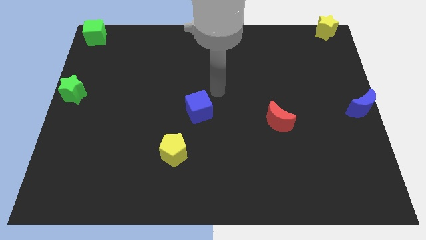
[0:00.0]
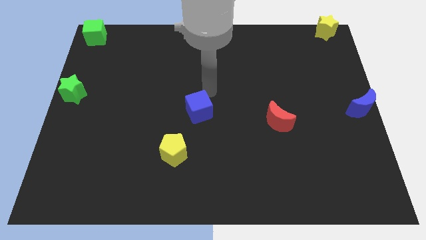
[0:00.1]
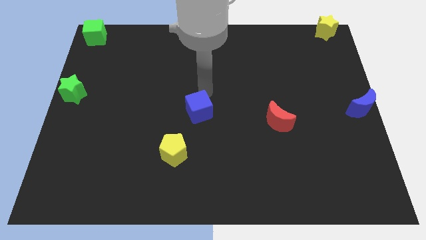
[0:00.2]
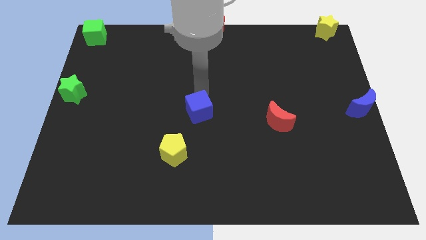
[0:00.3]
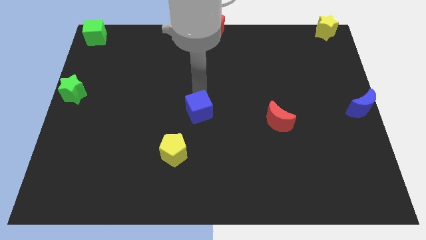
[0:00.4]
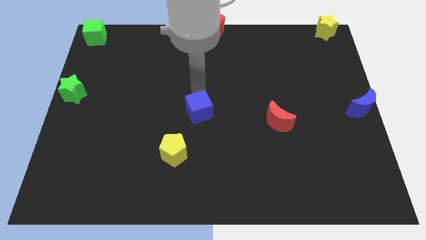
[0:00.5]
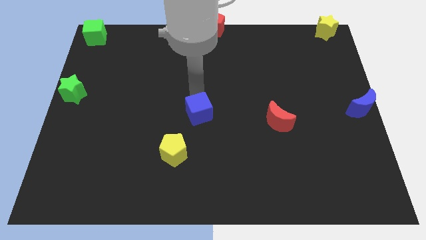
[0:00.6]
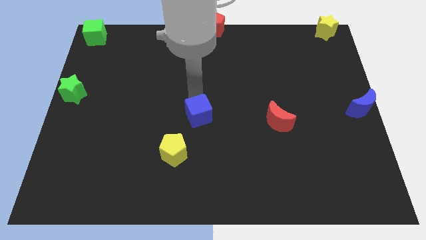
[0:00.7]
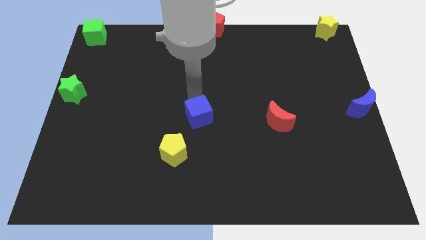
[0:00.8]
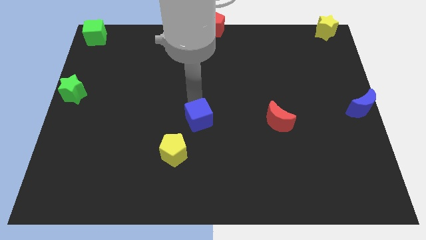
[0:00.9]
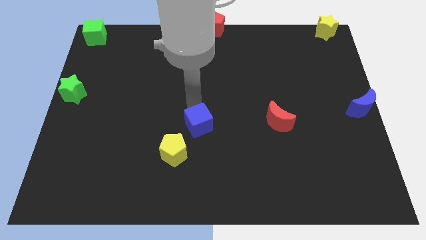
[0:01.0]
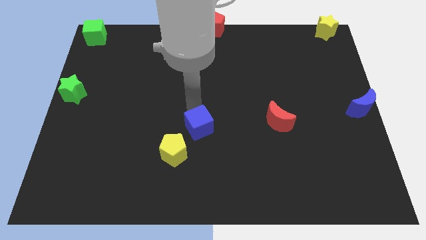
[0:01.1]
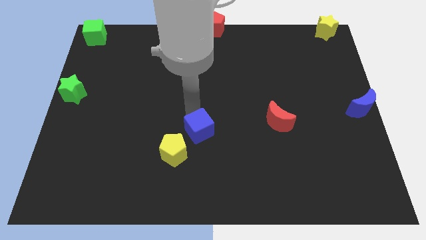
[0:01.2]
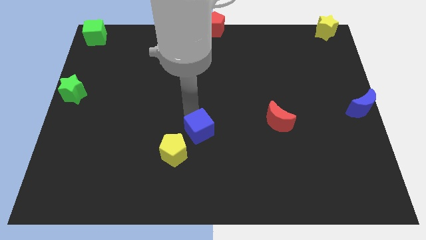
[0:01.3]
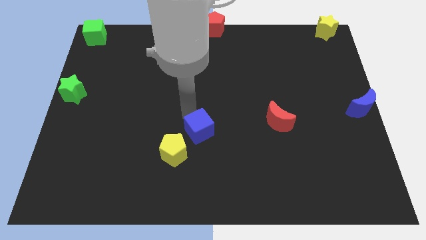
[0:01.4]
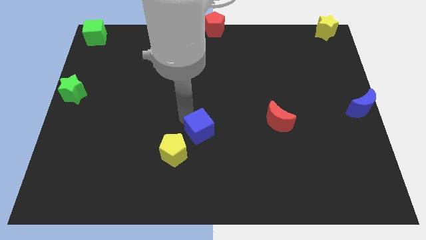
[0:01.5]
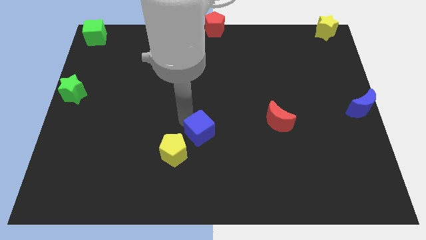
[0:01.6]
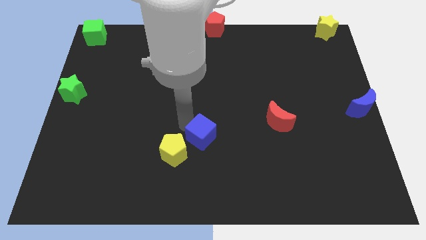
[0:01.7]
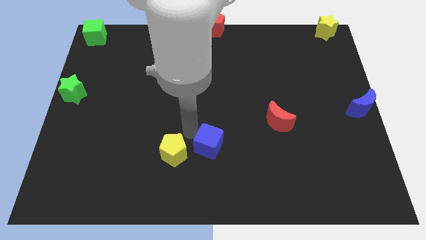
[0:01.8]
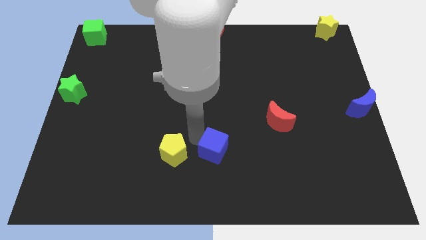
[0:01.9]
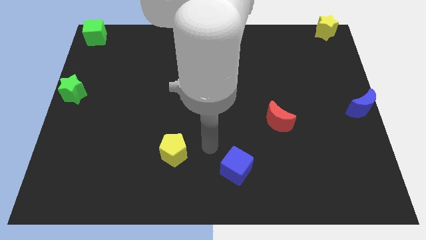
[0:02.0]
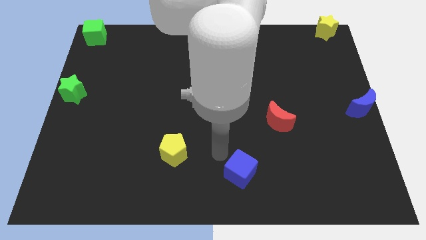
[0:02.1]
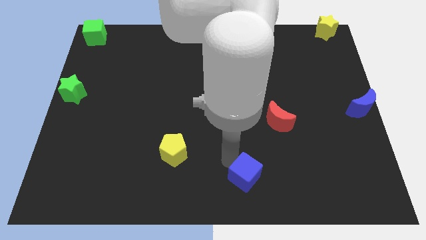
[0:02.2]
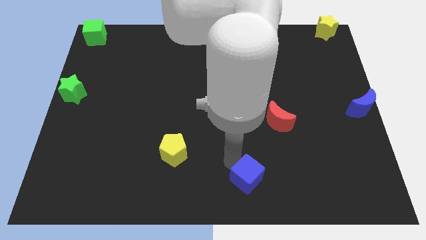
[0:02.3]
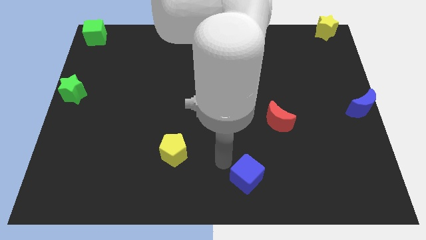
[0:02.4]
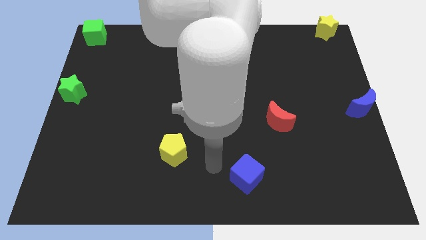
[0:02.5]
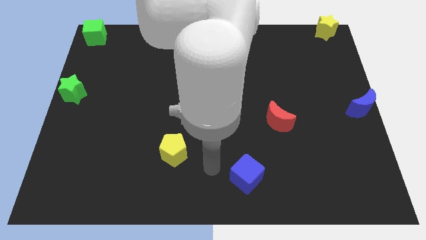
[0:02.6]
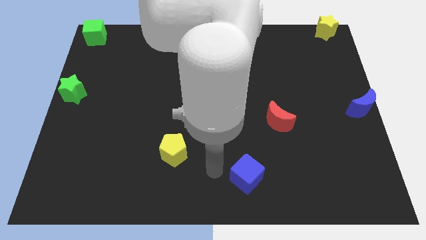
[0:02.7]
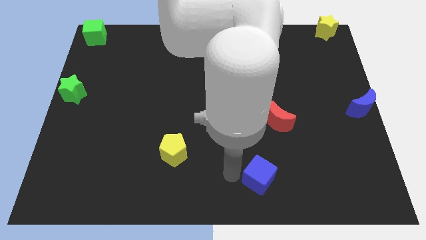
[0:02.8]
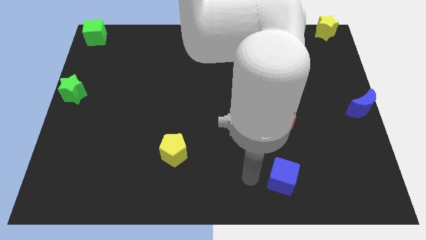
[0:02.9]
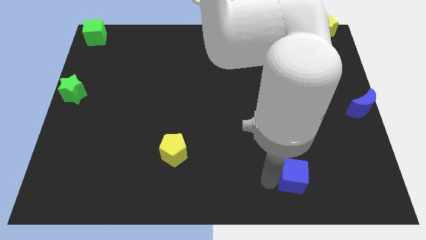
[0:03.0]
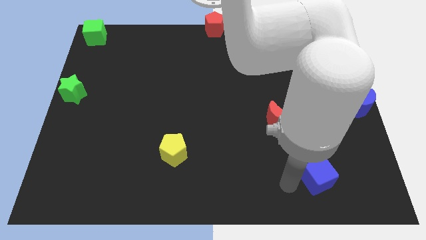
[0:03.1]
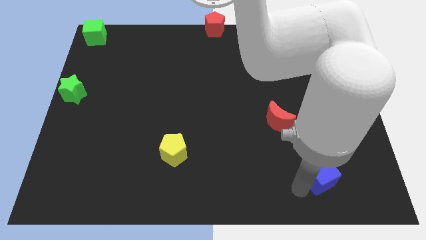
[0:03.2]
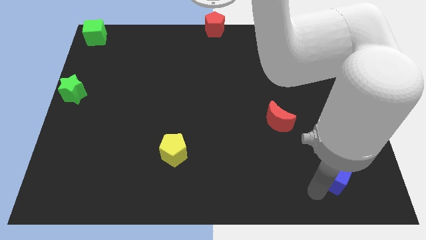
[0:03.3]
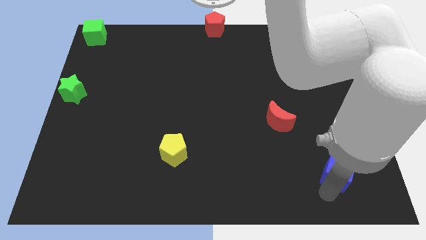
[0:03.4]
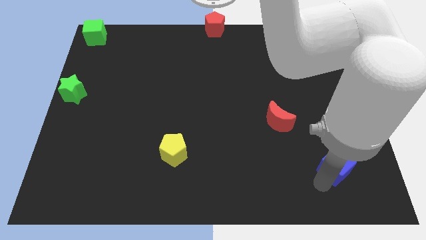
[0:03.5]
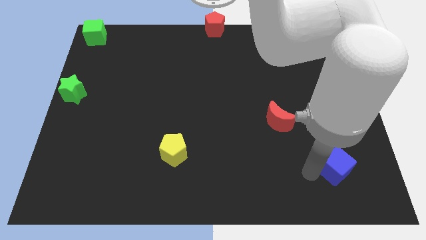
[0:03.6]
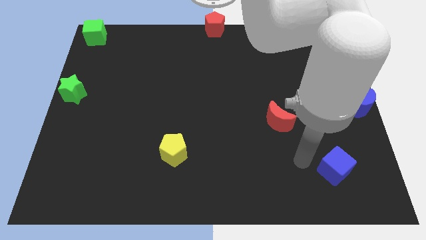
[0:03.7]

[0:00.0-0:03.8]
push the blue cube diagonally bottom right to the red moon

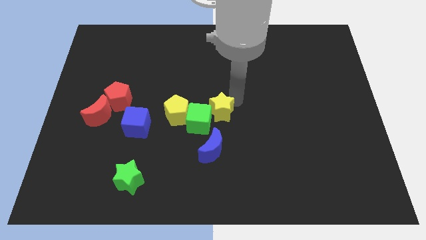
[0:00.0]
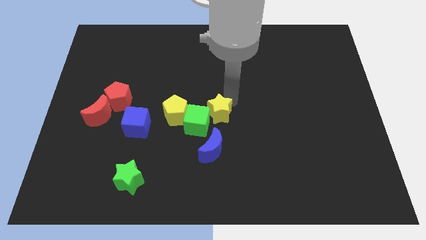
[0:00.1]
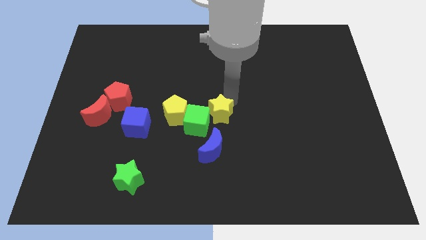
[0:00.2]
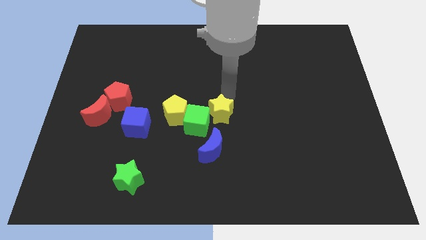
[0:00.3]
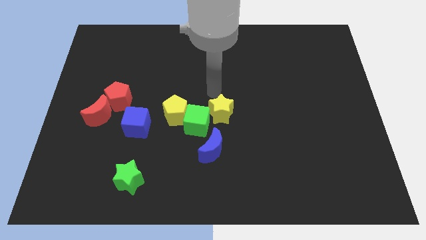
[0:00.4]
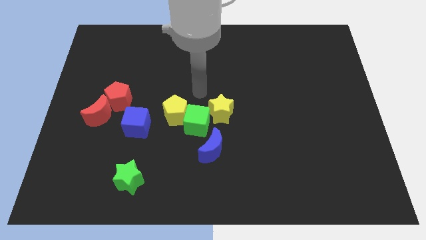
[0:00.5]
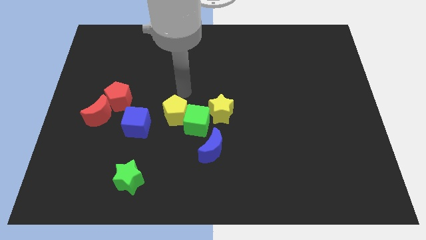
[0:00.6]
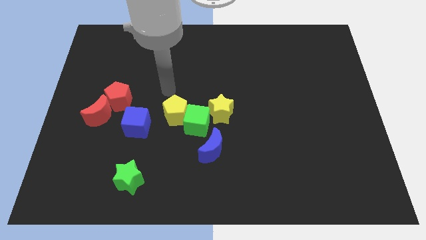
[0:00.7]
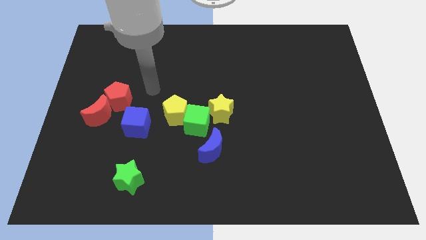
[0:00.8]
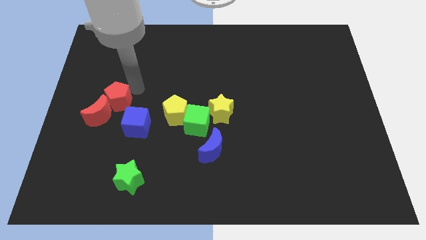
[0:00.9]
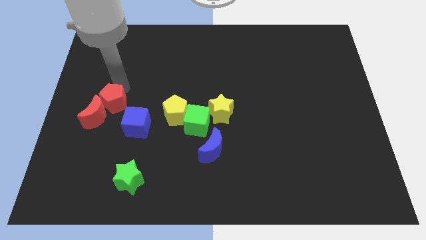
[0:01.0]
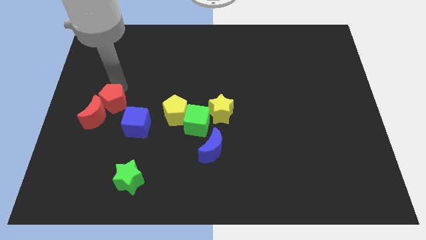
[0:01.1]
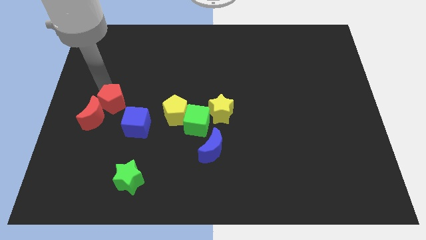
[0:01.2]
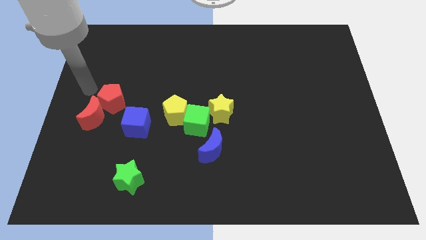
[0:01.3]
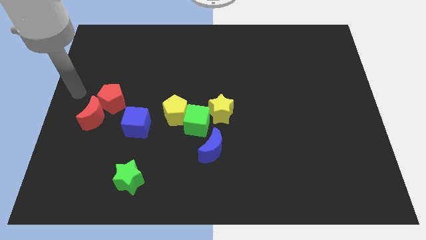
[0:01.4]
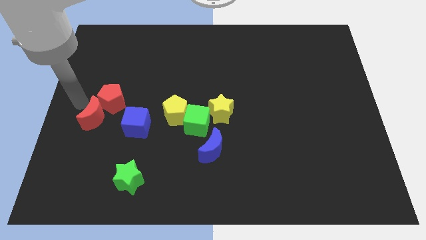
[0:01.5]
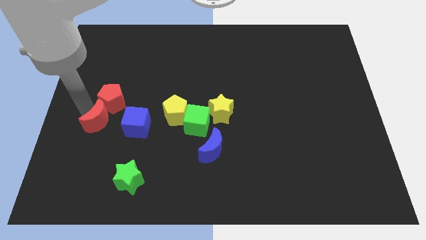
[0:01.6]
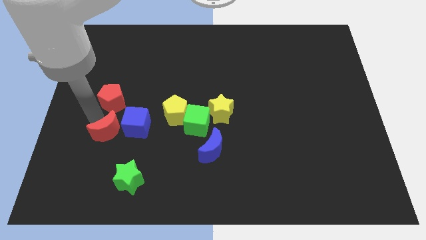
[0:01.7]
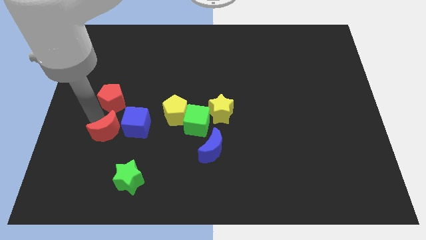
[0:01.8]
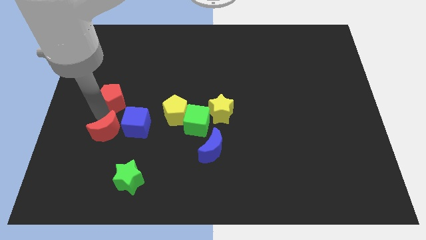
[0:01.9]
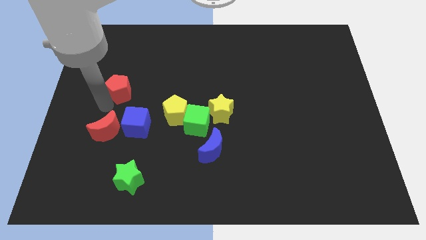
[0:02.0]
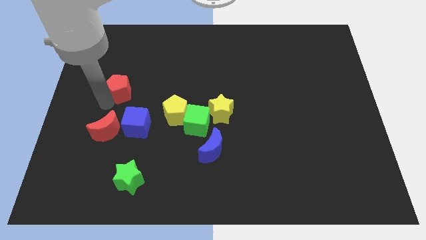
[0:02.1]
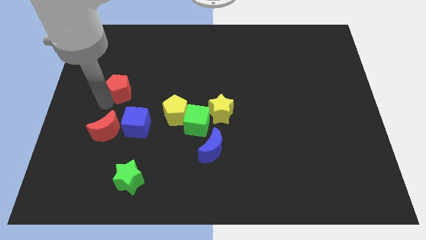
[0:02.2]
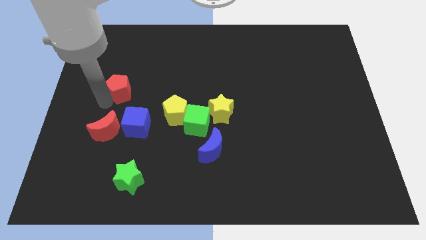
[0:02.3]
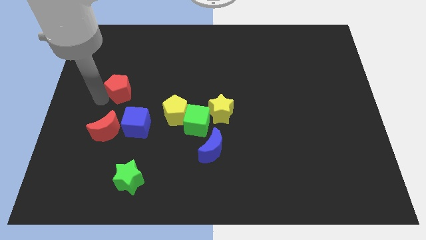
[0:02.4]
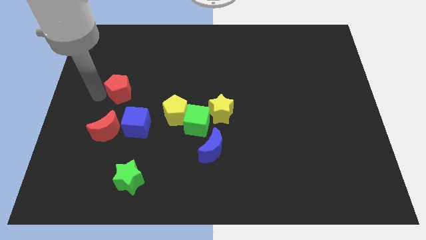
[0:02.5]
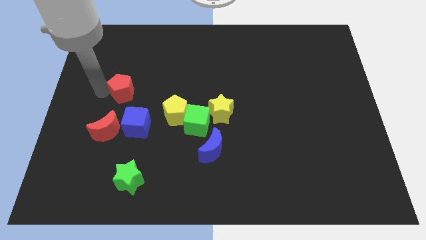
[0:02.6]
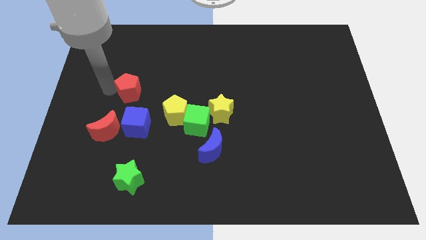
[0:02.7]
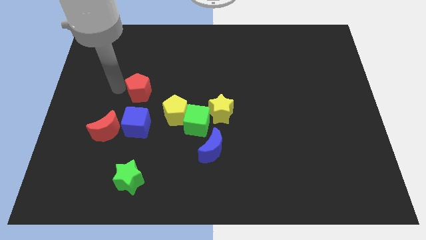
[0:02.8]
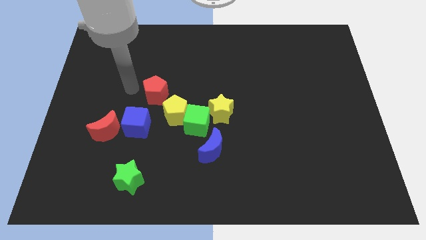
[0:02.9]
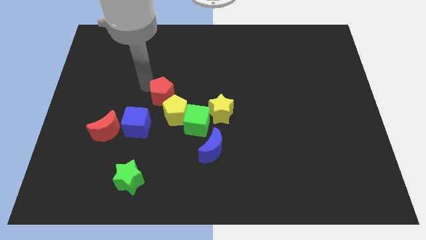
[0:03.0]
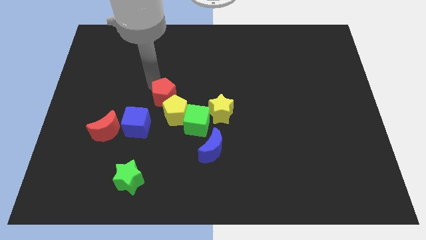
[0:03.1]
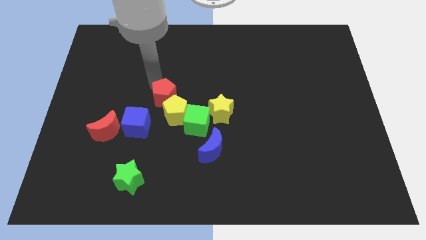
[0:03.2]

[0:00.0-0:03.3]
separate both the red blocks

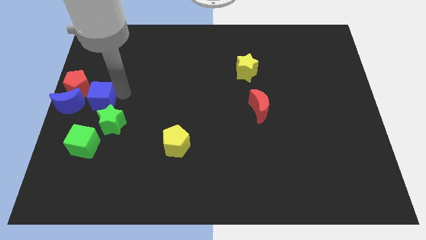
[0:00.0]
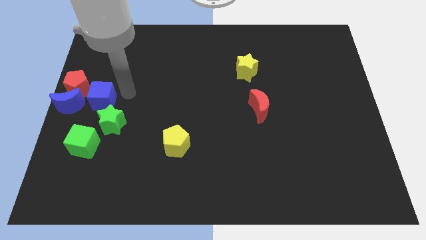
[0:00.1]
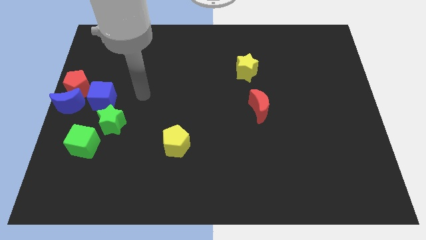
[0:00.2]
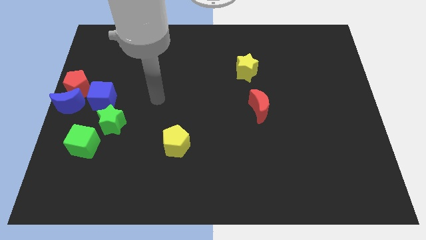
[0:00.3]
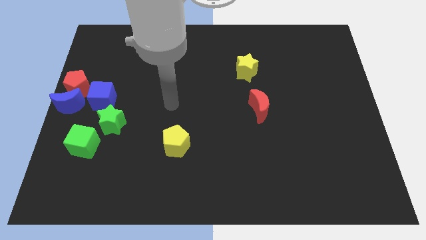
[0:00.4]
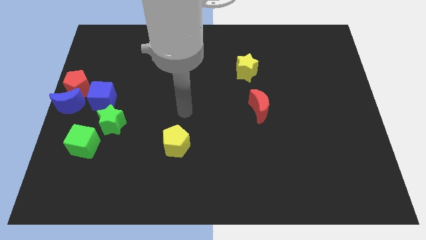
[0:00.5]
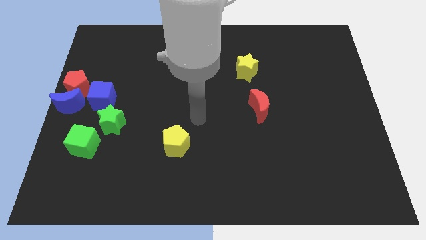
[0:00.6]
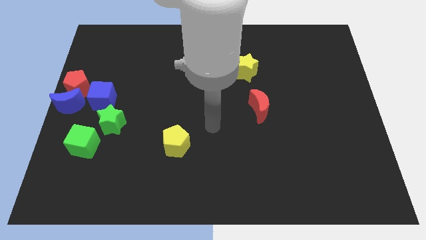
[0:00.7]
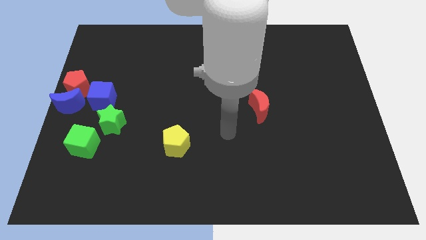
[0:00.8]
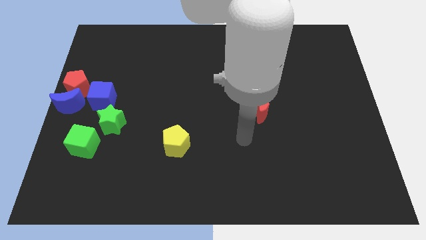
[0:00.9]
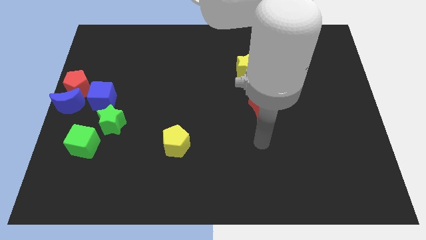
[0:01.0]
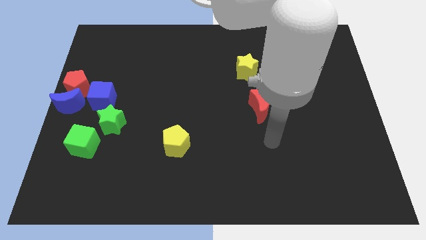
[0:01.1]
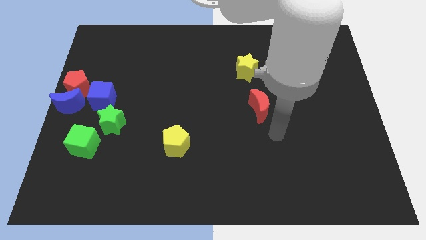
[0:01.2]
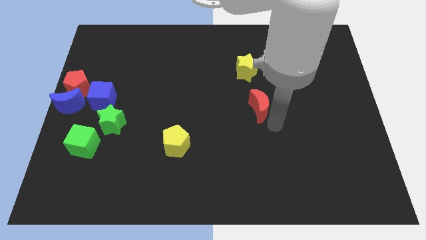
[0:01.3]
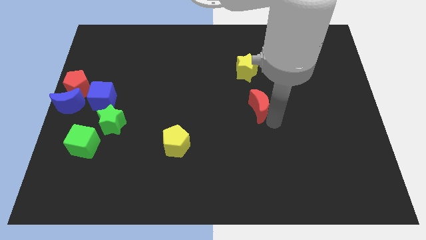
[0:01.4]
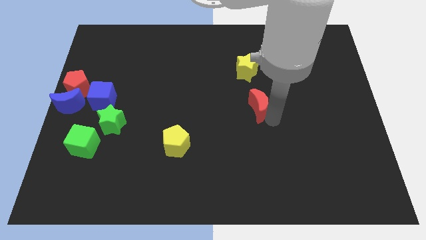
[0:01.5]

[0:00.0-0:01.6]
move your arm to the bottom right of the red crescent

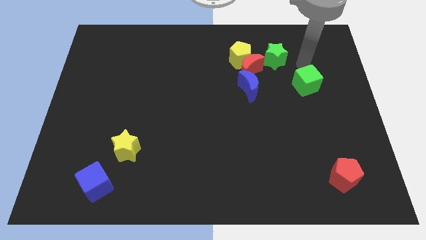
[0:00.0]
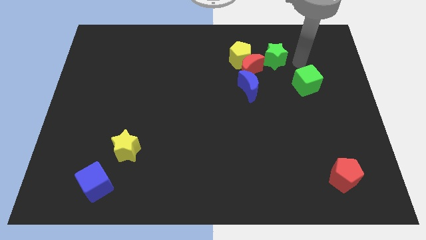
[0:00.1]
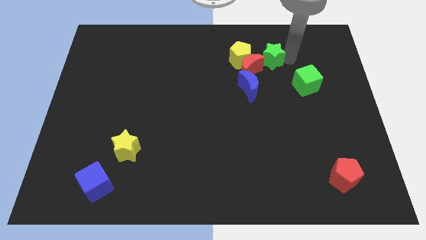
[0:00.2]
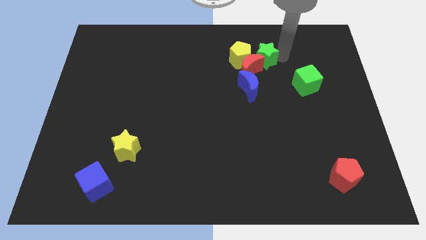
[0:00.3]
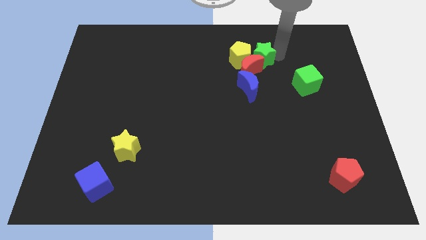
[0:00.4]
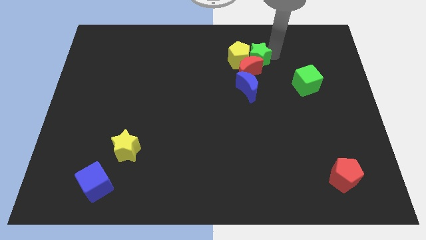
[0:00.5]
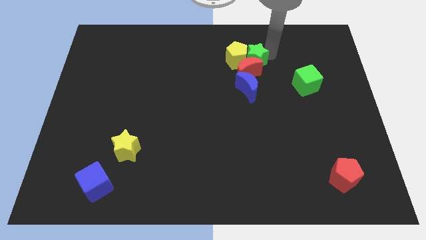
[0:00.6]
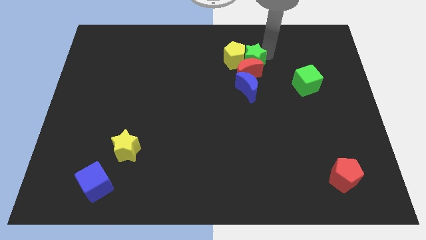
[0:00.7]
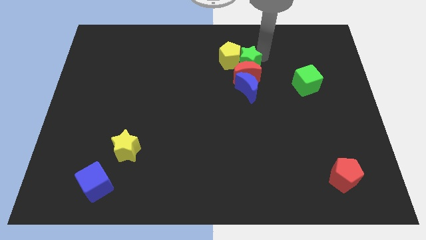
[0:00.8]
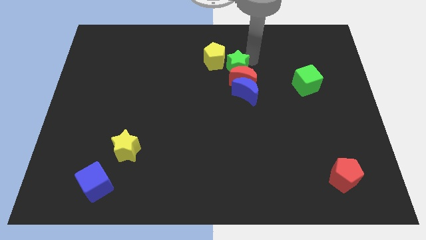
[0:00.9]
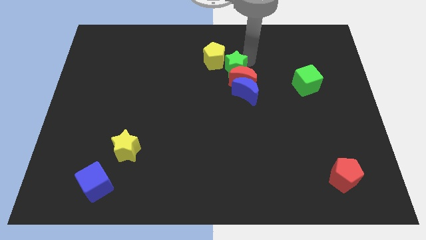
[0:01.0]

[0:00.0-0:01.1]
push the green star slightly to the left
